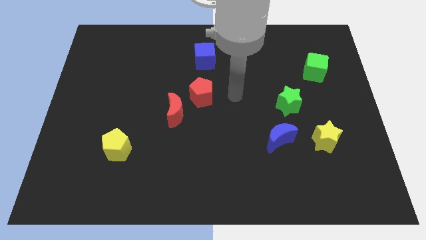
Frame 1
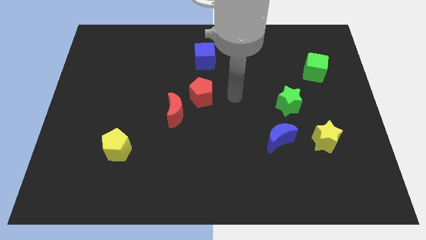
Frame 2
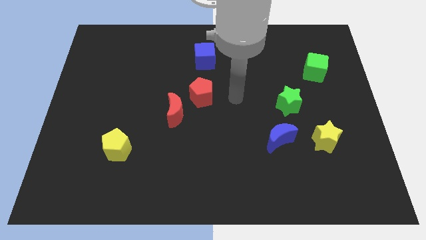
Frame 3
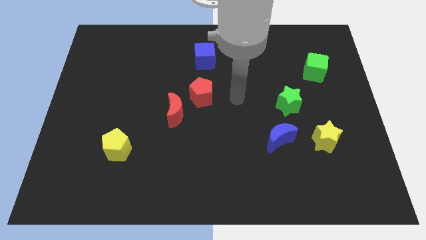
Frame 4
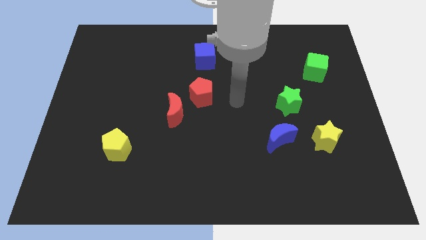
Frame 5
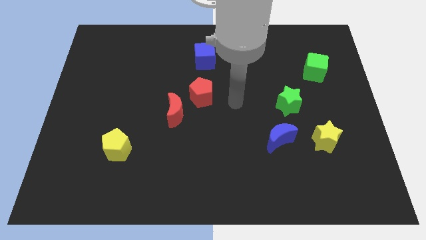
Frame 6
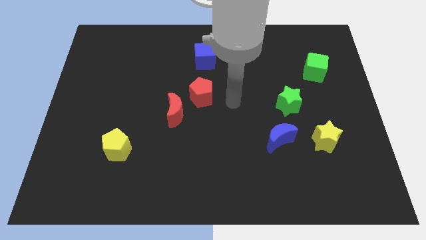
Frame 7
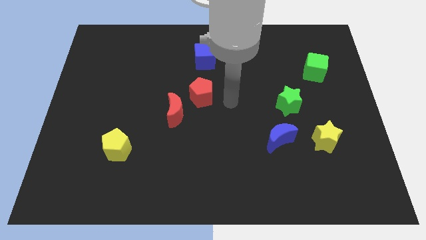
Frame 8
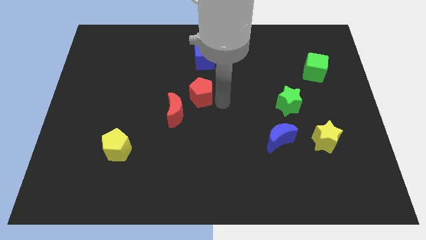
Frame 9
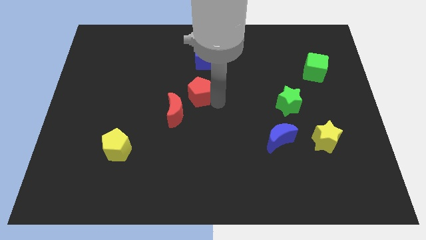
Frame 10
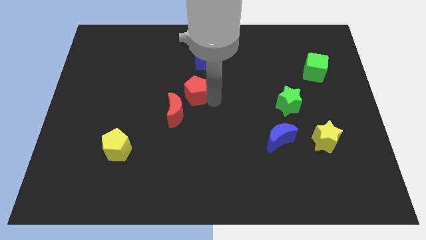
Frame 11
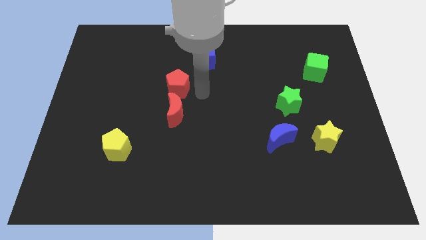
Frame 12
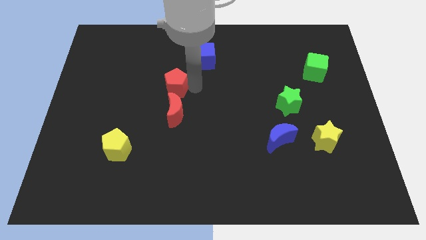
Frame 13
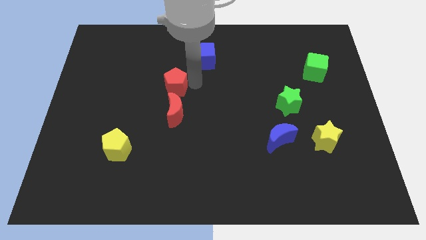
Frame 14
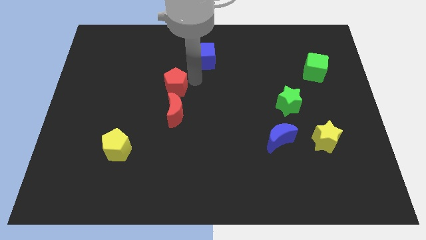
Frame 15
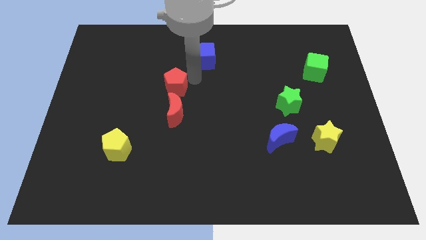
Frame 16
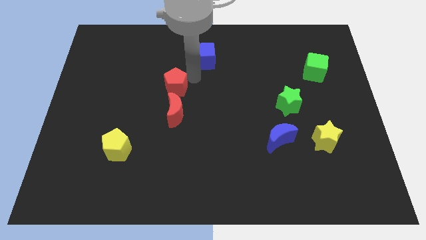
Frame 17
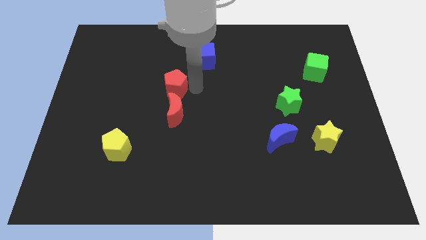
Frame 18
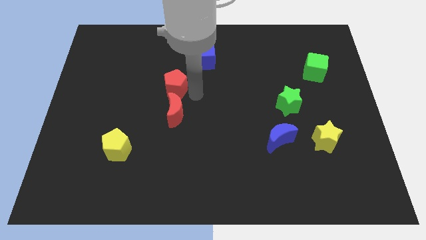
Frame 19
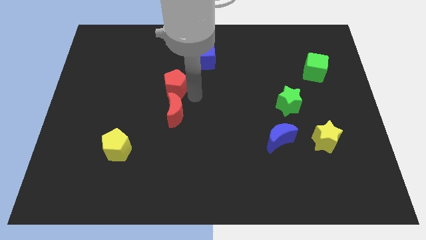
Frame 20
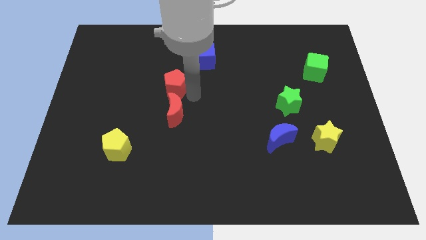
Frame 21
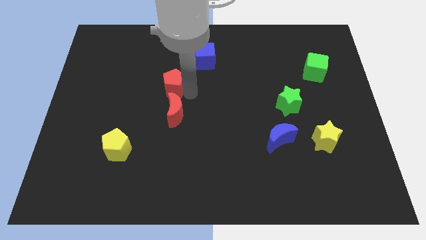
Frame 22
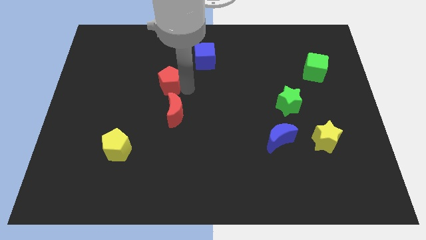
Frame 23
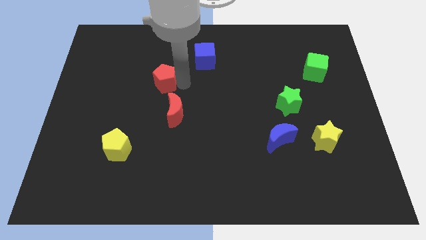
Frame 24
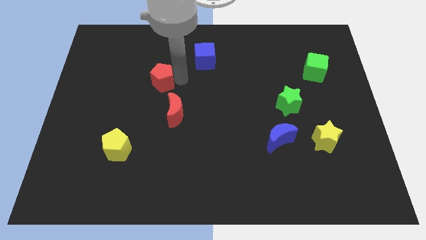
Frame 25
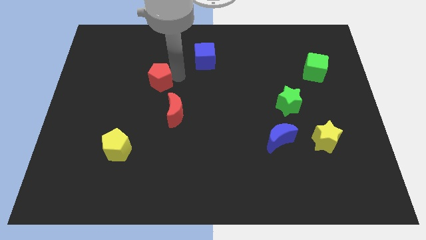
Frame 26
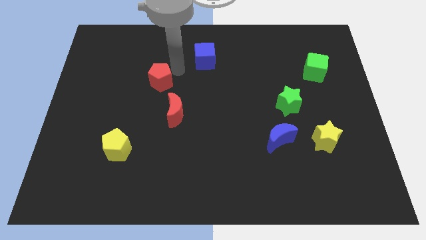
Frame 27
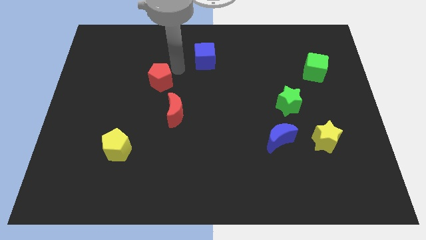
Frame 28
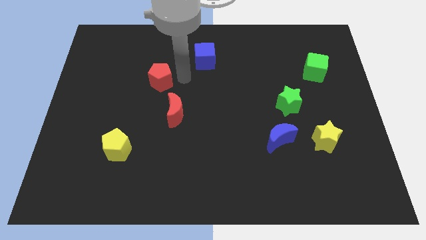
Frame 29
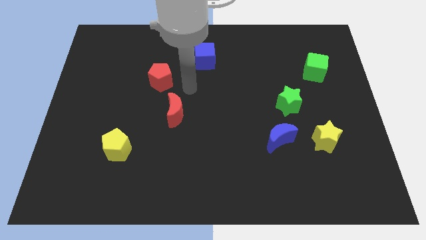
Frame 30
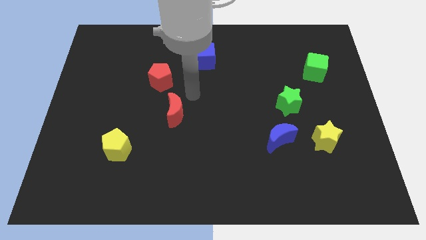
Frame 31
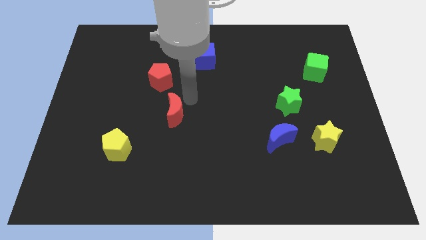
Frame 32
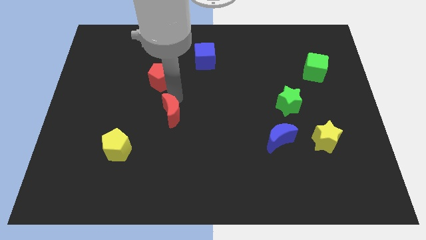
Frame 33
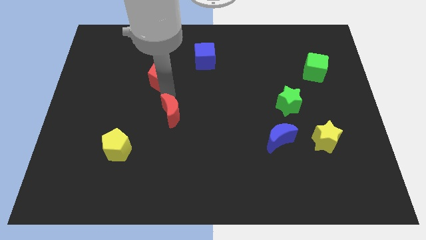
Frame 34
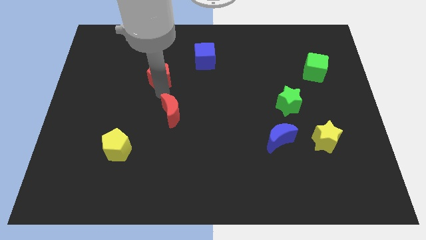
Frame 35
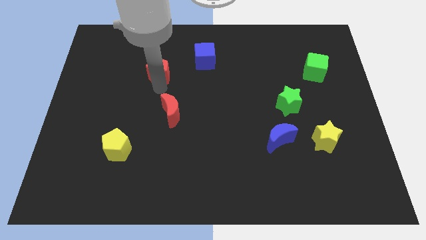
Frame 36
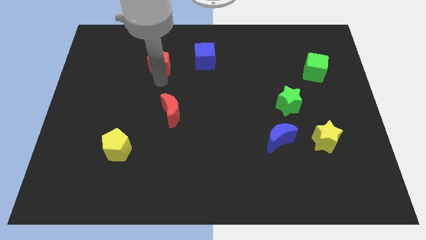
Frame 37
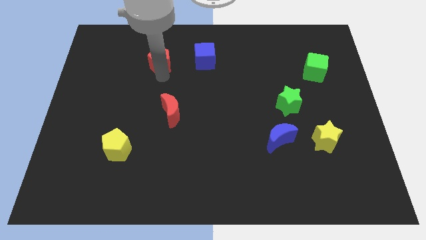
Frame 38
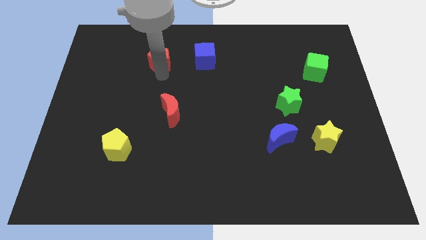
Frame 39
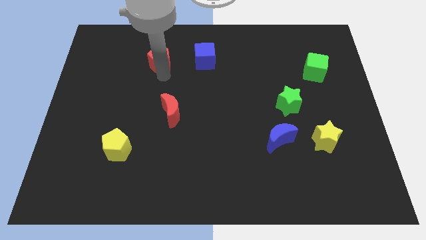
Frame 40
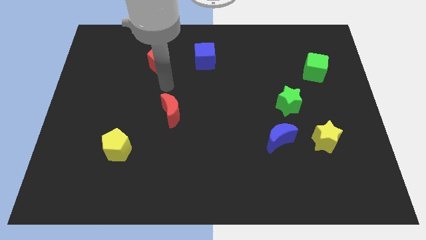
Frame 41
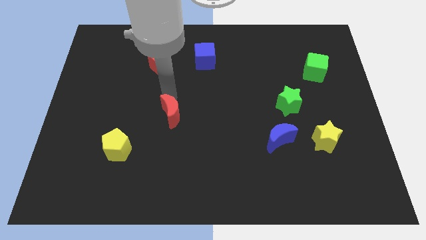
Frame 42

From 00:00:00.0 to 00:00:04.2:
move the red pentagon left to the blue cube

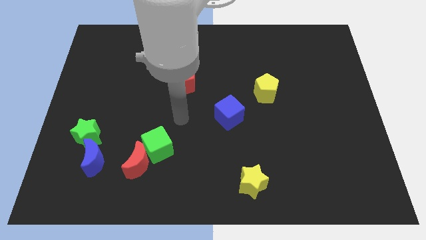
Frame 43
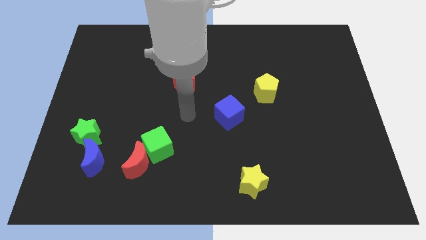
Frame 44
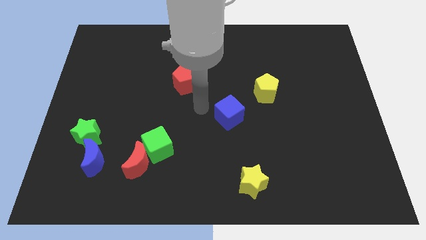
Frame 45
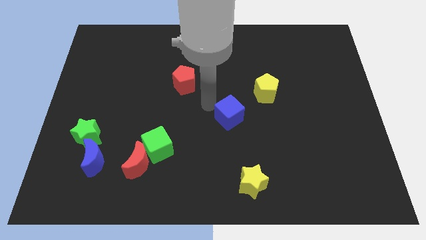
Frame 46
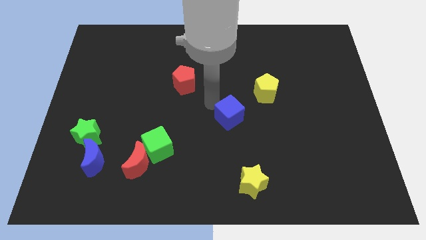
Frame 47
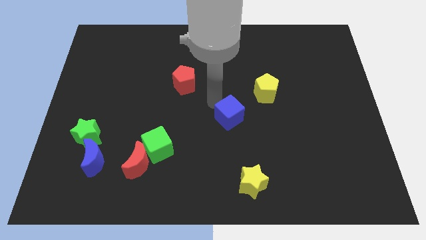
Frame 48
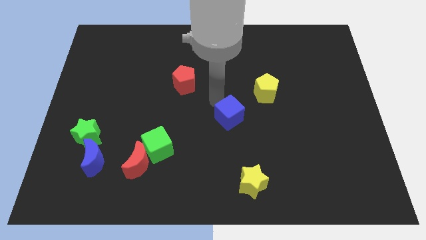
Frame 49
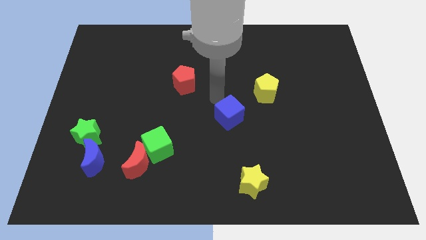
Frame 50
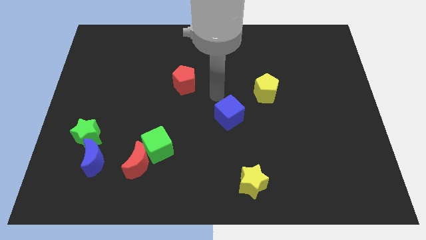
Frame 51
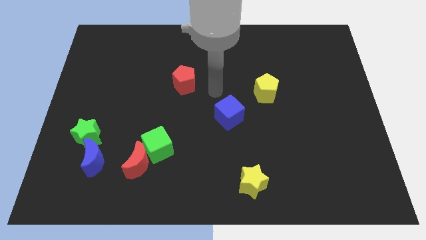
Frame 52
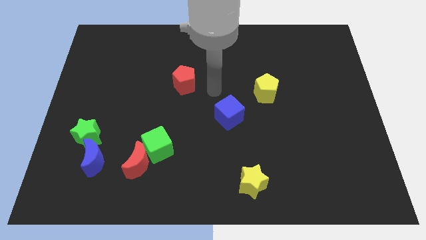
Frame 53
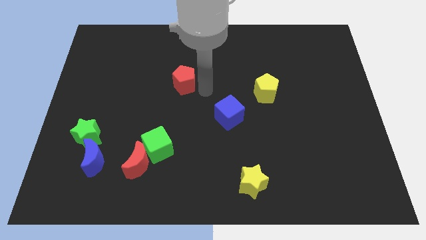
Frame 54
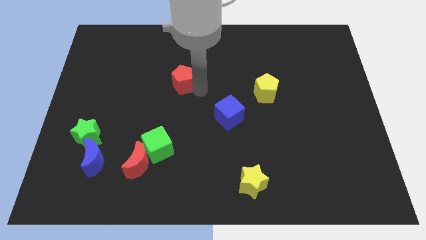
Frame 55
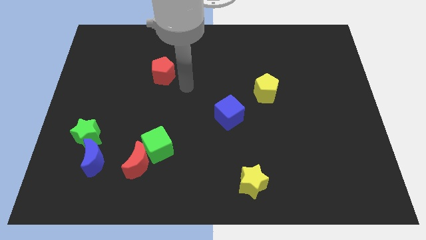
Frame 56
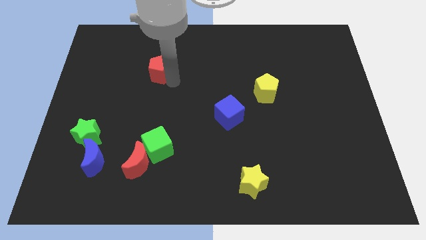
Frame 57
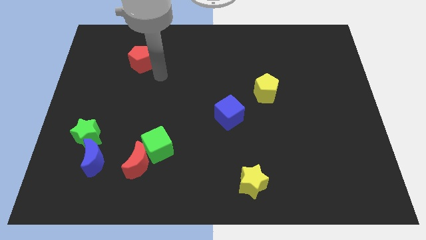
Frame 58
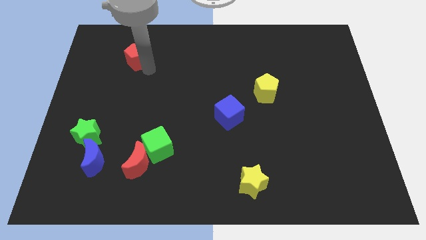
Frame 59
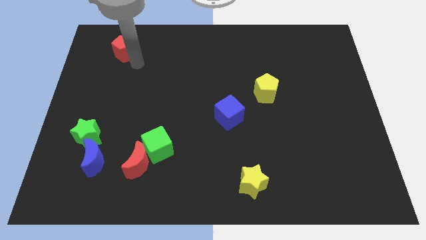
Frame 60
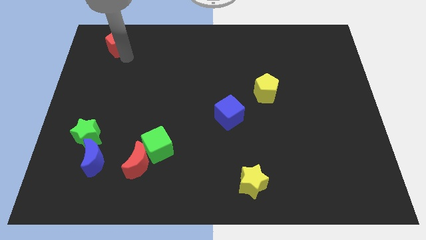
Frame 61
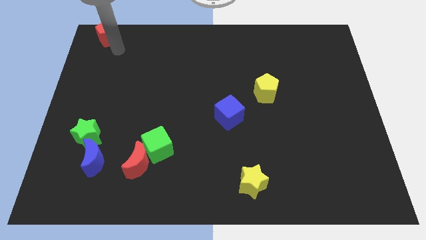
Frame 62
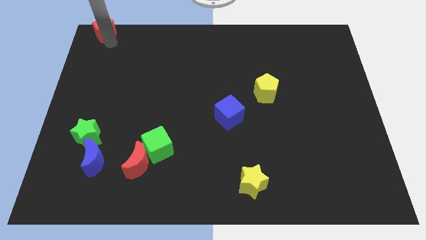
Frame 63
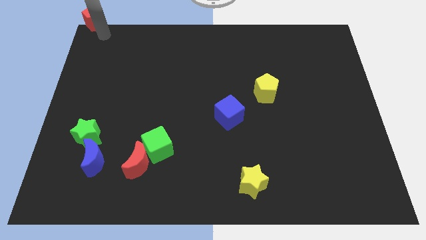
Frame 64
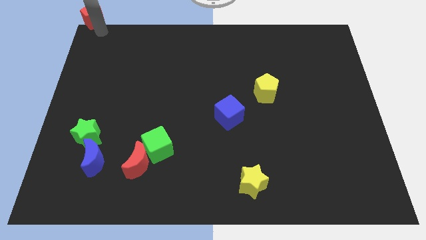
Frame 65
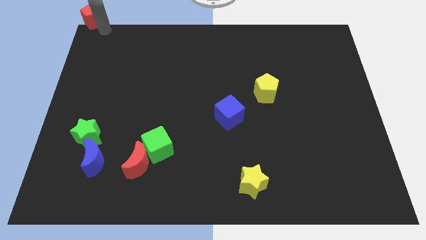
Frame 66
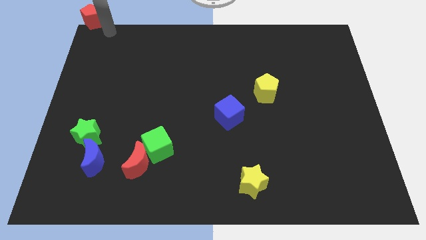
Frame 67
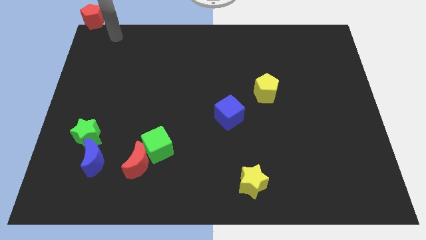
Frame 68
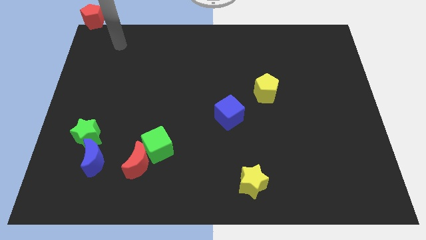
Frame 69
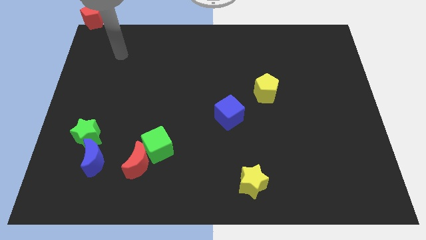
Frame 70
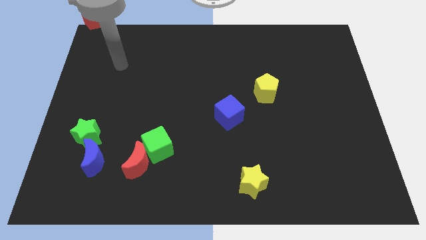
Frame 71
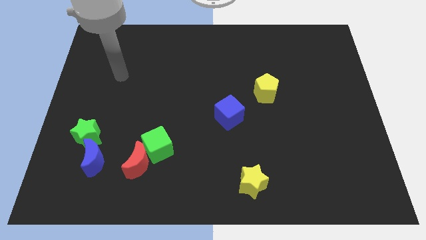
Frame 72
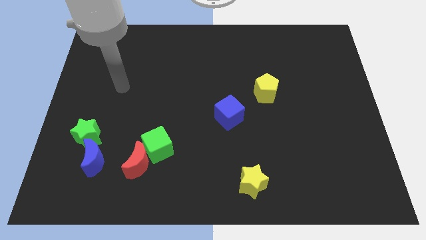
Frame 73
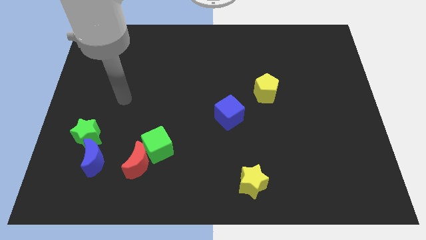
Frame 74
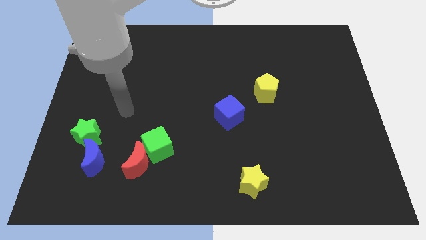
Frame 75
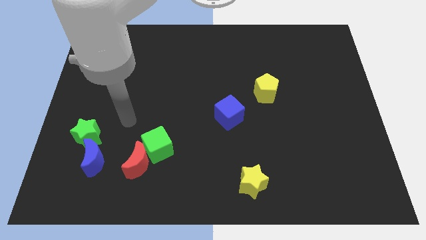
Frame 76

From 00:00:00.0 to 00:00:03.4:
place red pentagon towards top left corner

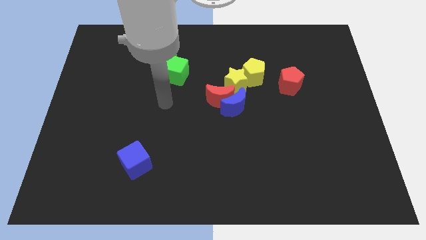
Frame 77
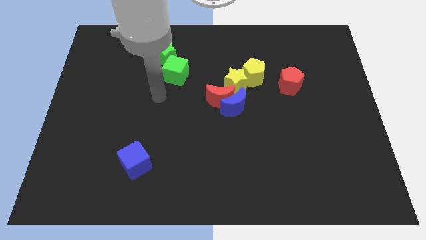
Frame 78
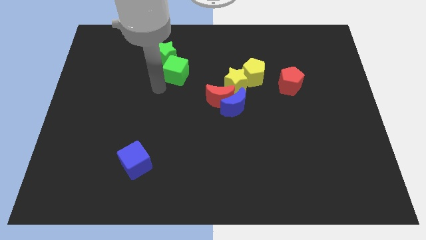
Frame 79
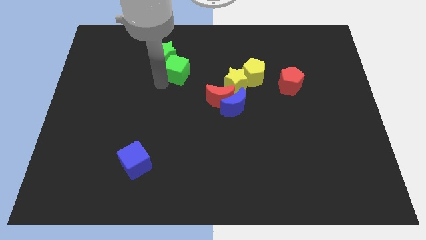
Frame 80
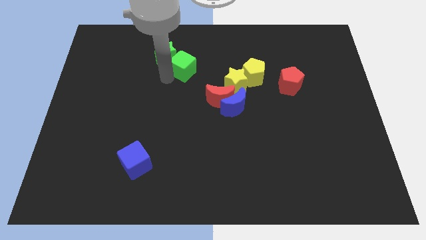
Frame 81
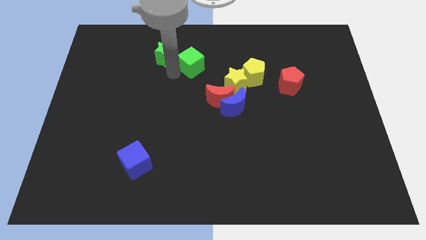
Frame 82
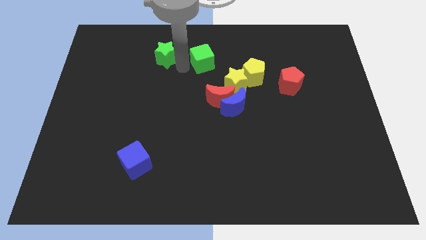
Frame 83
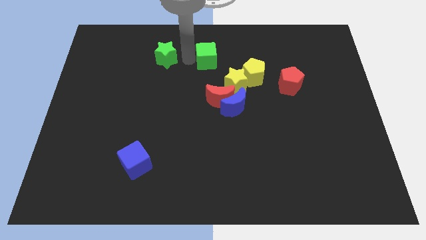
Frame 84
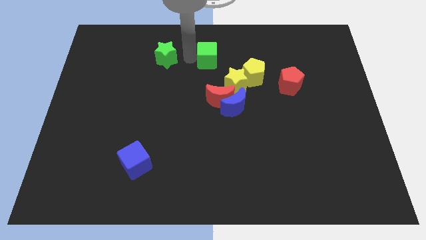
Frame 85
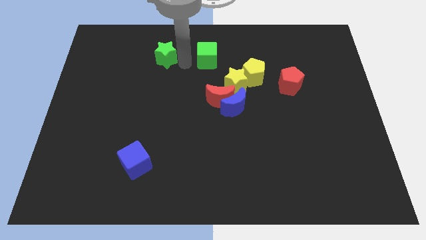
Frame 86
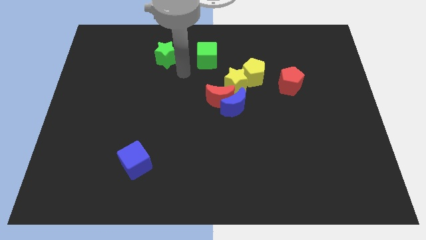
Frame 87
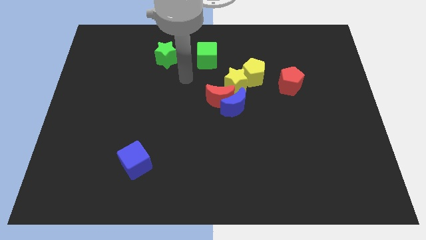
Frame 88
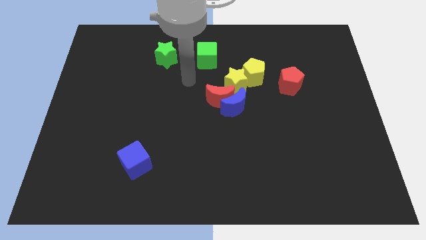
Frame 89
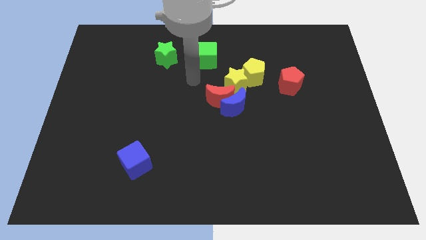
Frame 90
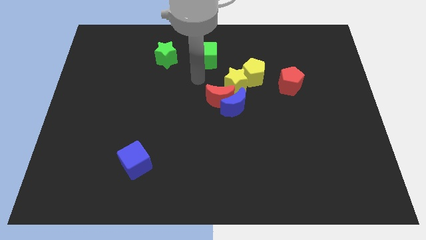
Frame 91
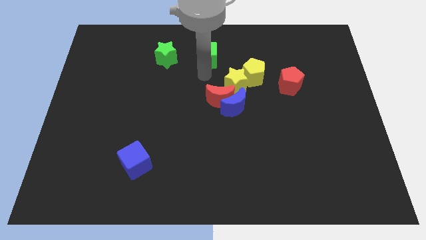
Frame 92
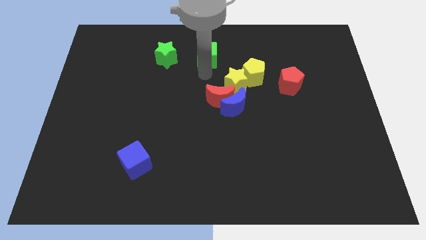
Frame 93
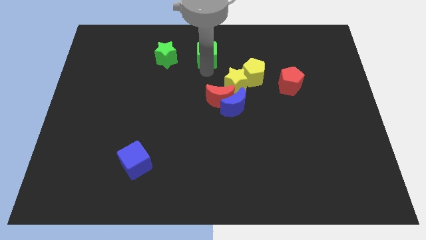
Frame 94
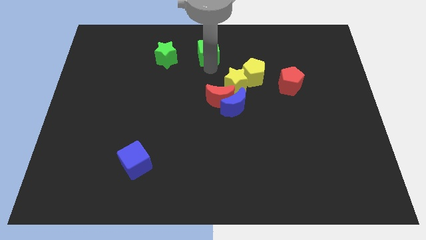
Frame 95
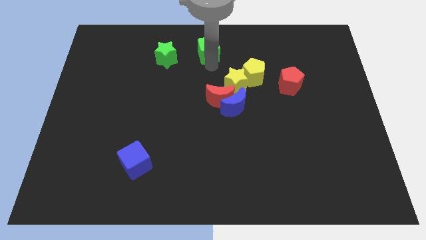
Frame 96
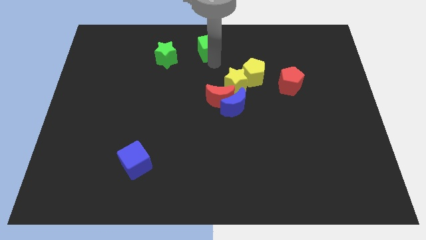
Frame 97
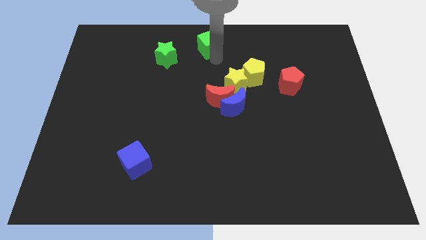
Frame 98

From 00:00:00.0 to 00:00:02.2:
separate the green cube and green star
